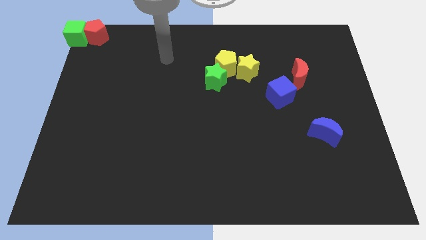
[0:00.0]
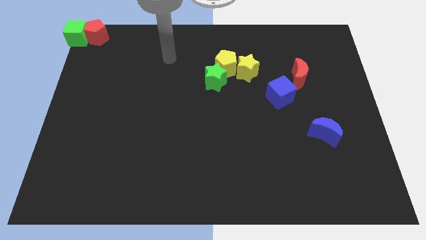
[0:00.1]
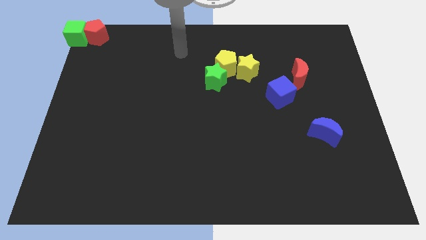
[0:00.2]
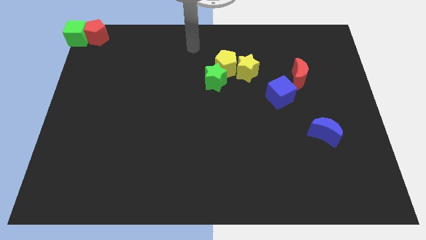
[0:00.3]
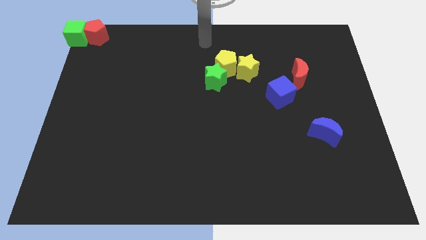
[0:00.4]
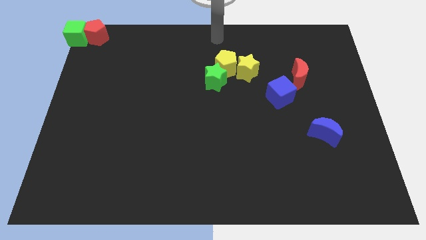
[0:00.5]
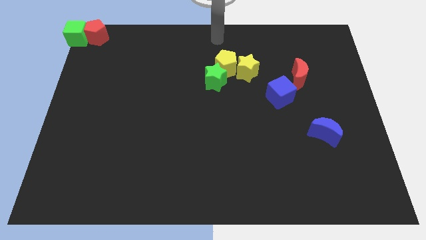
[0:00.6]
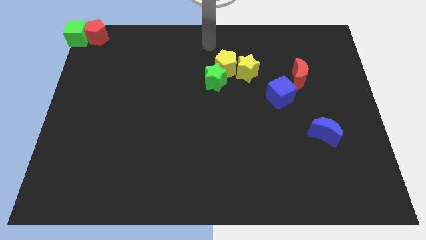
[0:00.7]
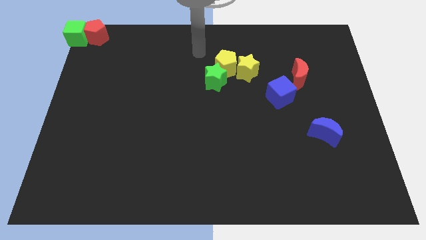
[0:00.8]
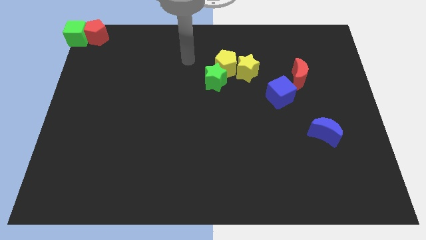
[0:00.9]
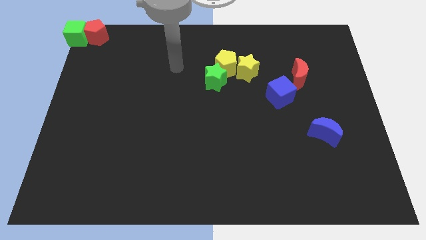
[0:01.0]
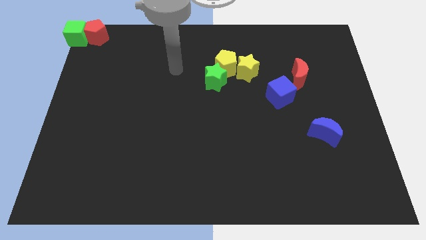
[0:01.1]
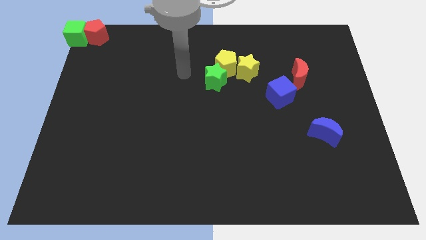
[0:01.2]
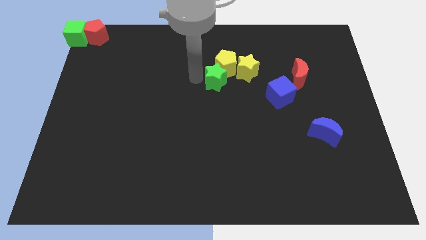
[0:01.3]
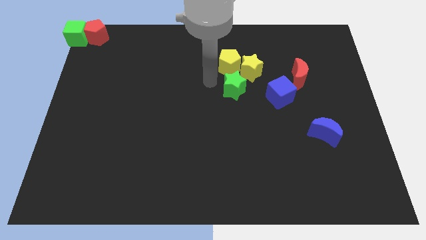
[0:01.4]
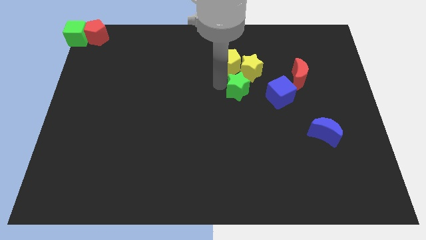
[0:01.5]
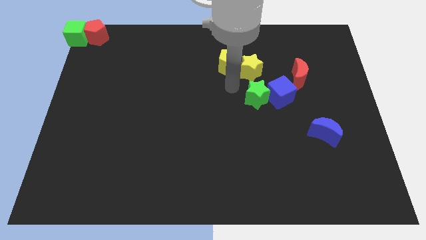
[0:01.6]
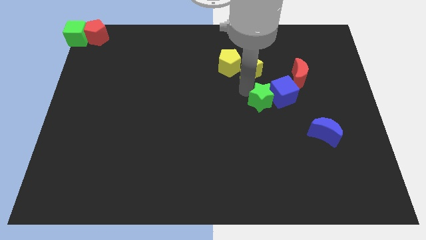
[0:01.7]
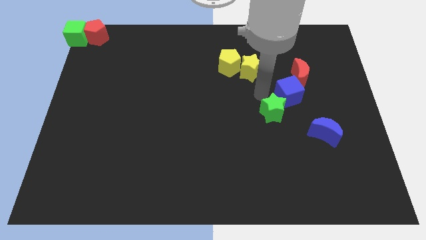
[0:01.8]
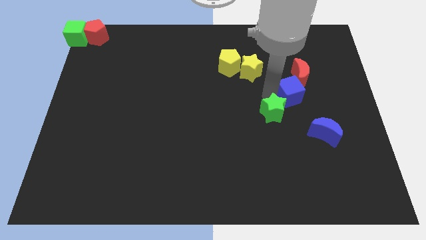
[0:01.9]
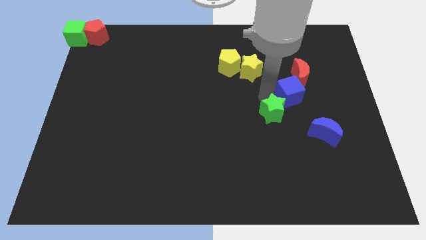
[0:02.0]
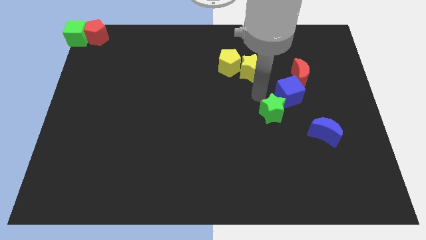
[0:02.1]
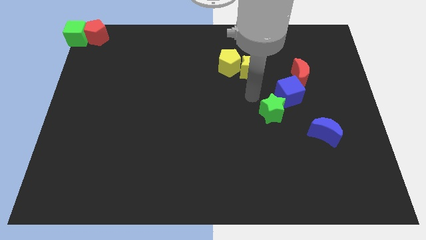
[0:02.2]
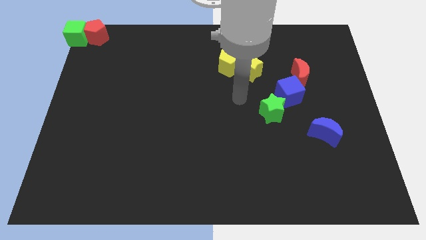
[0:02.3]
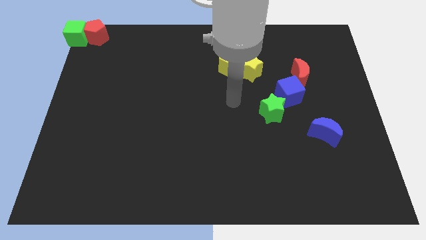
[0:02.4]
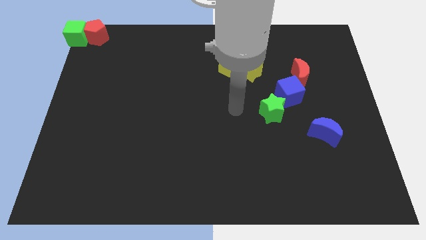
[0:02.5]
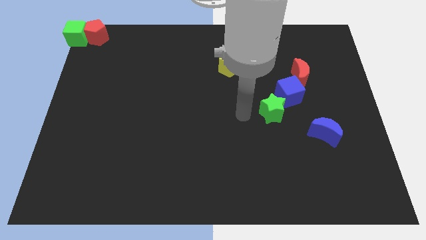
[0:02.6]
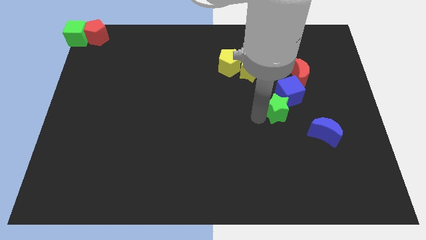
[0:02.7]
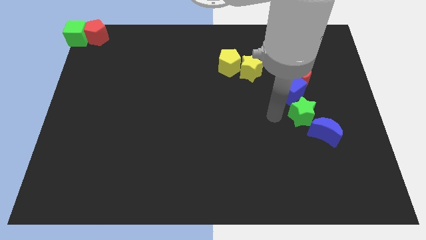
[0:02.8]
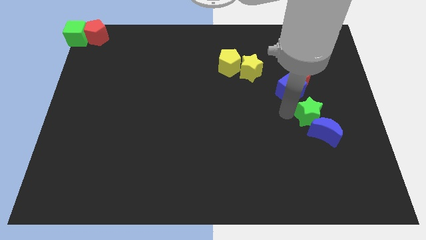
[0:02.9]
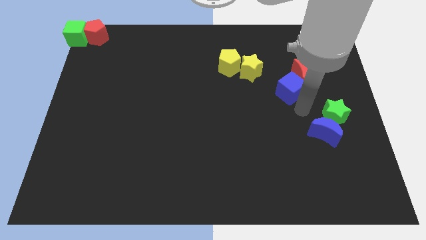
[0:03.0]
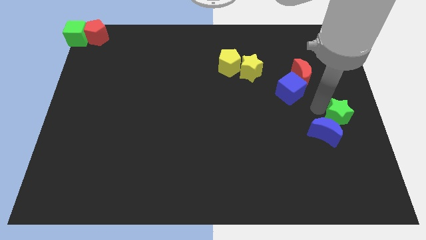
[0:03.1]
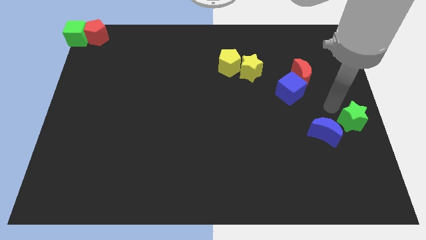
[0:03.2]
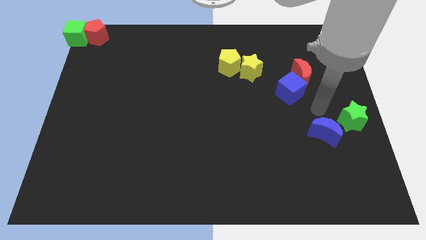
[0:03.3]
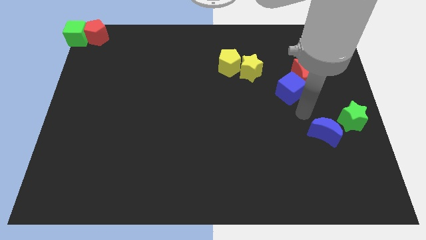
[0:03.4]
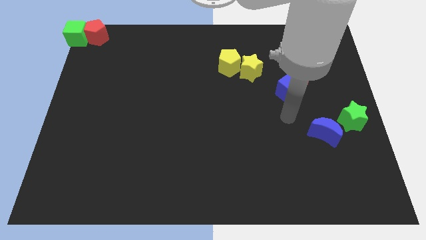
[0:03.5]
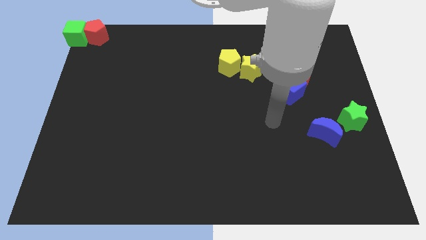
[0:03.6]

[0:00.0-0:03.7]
place green star to the top right of blue crescent

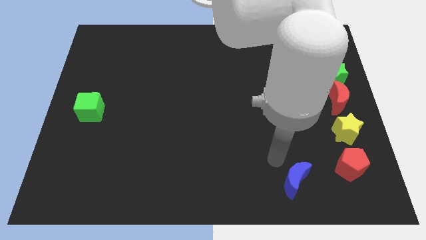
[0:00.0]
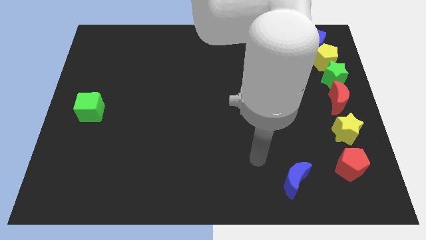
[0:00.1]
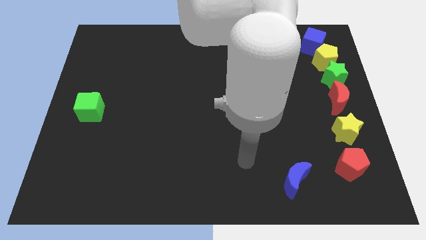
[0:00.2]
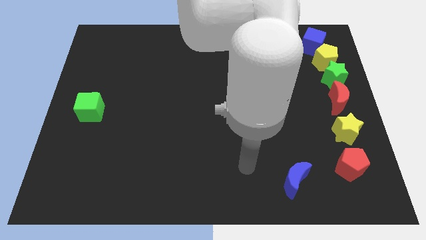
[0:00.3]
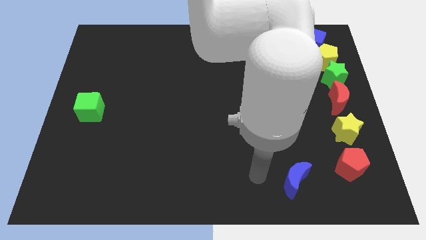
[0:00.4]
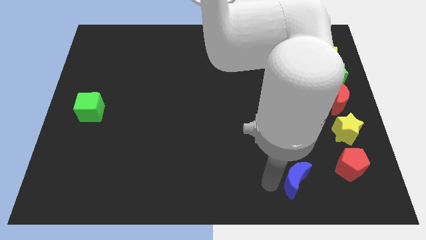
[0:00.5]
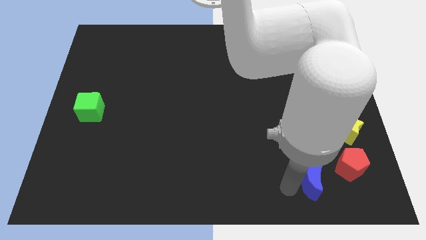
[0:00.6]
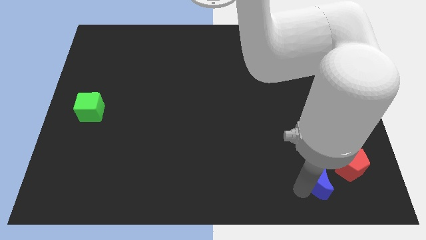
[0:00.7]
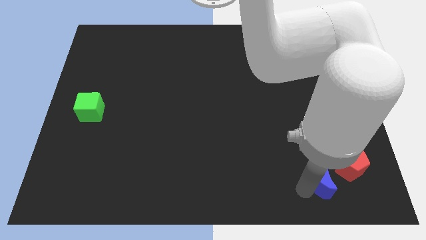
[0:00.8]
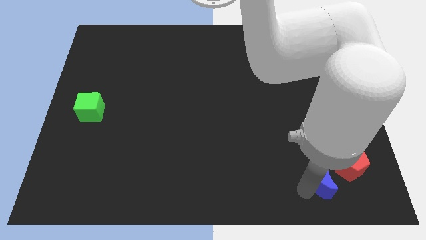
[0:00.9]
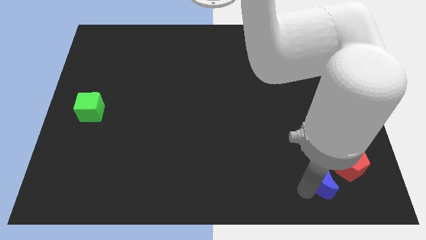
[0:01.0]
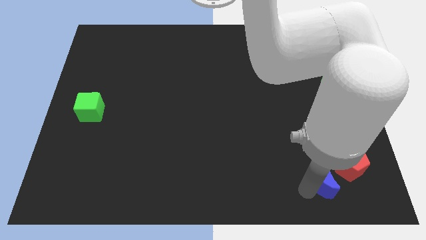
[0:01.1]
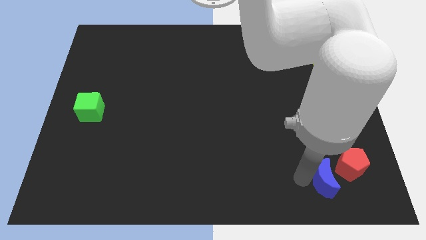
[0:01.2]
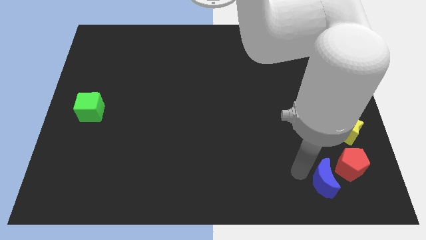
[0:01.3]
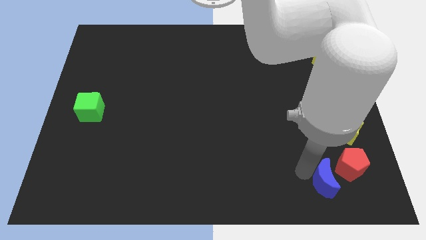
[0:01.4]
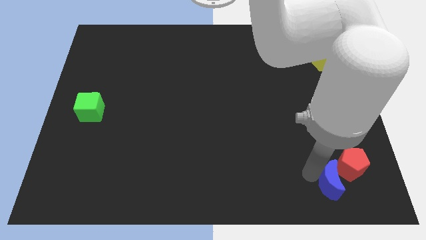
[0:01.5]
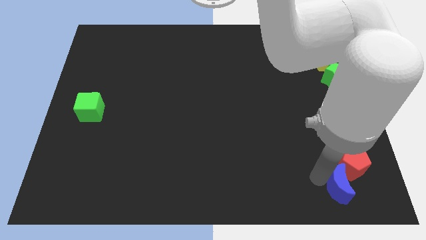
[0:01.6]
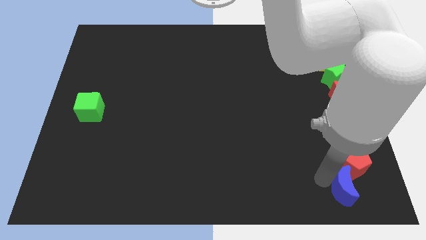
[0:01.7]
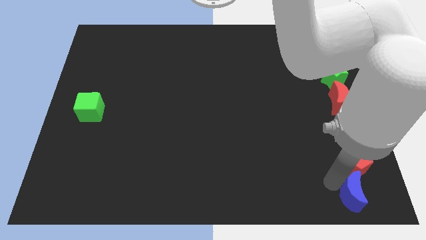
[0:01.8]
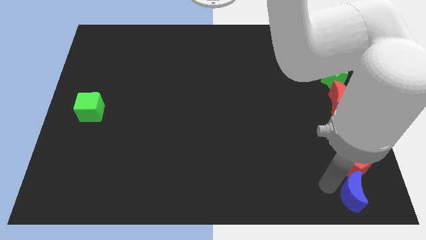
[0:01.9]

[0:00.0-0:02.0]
move the blue moon into the red pentagon

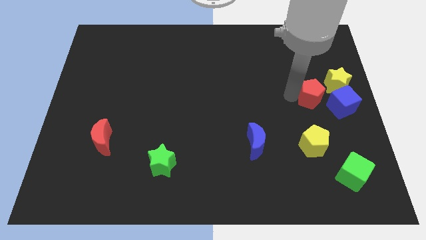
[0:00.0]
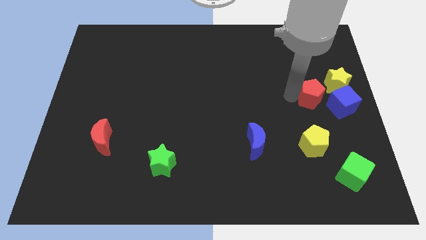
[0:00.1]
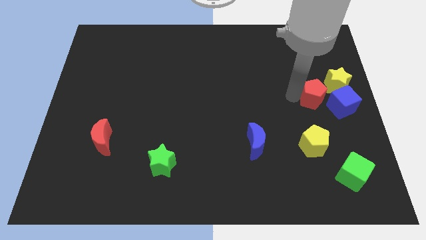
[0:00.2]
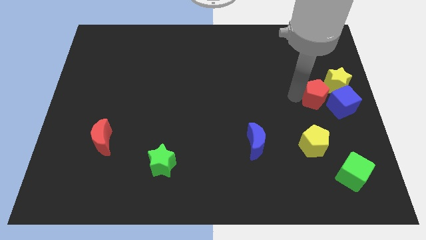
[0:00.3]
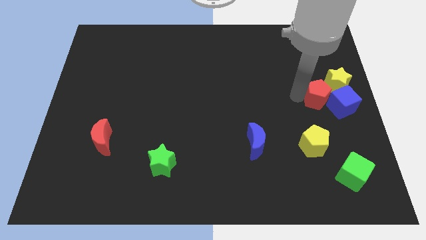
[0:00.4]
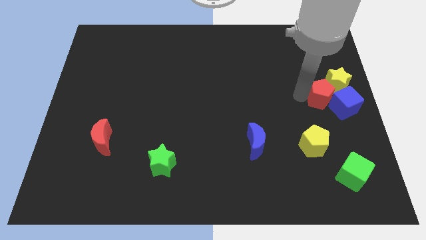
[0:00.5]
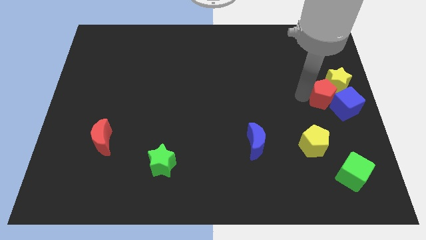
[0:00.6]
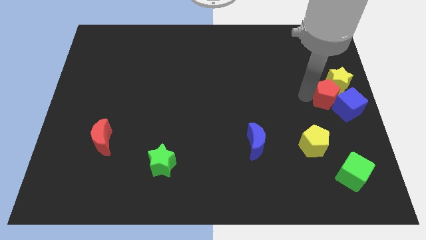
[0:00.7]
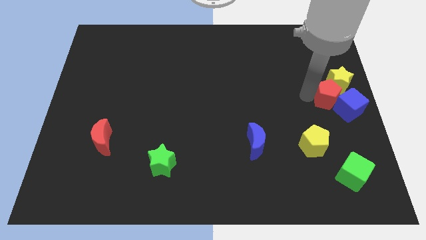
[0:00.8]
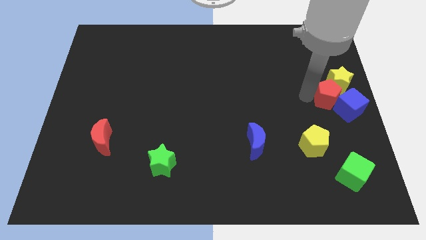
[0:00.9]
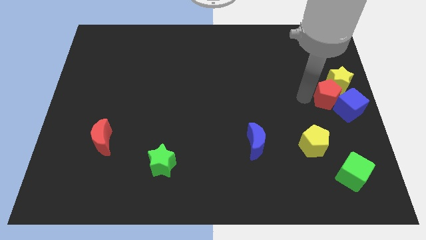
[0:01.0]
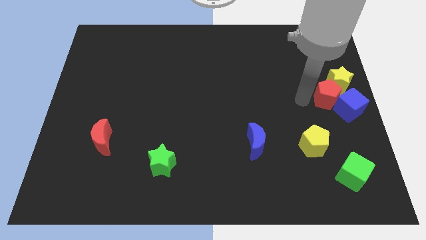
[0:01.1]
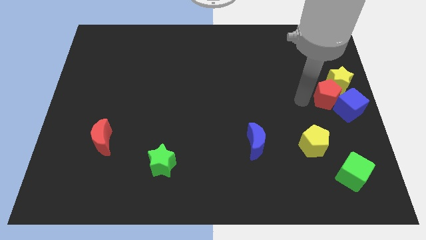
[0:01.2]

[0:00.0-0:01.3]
push the blue cube with the red pentagon slightly towards the right center of the board

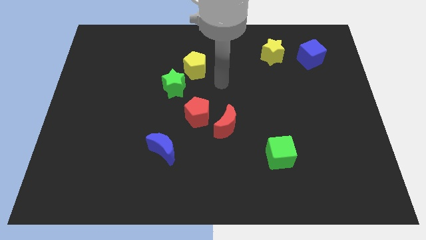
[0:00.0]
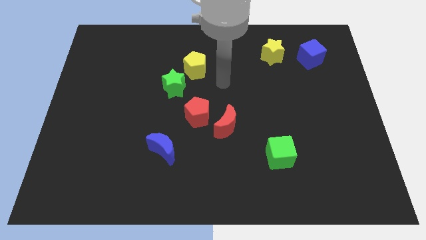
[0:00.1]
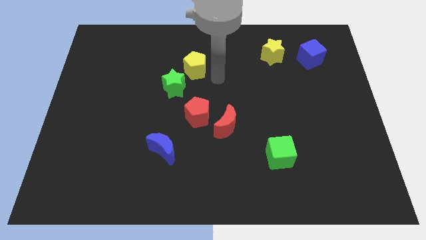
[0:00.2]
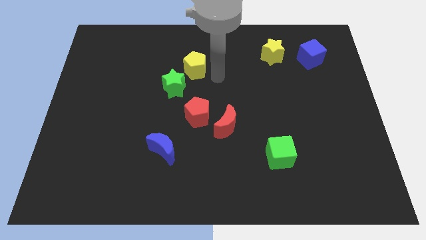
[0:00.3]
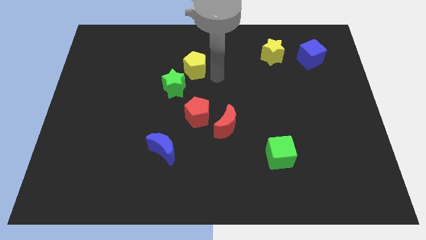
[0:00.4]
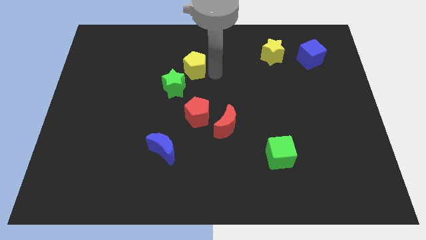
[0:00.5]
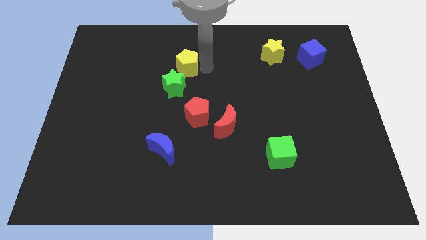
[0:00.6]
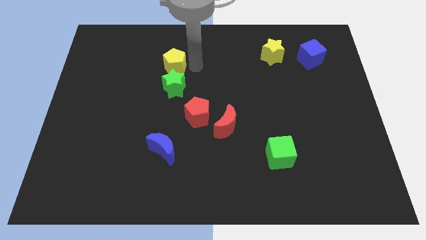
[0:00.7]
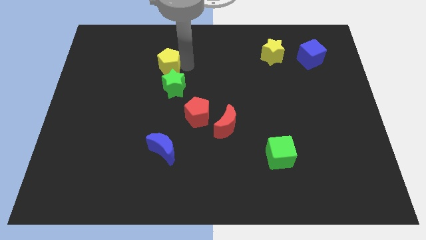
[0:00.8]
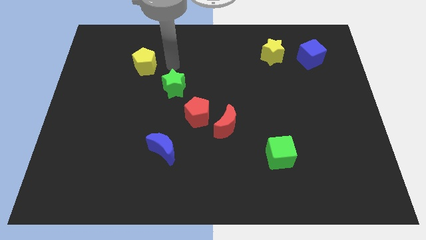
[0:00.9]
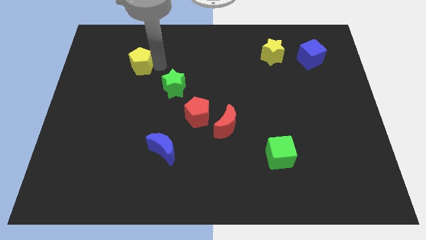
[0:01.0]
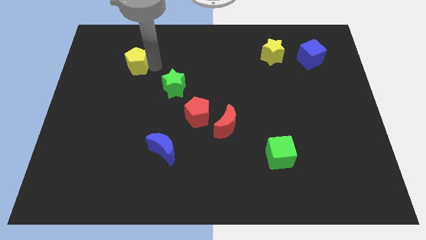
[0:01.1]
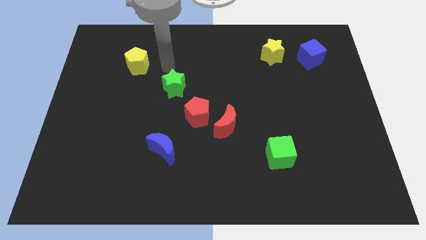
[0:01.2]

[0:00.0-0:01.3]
push the yellow pentagon slightly to the left side of the board

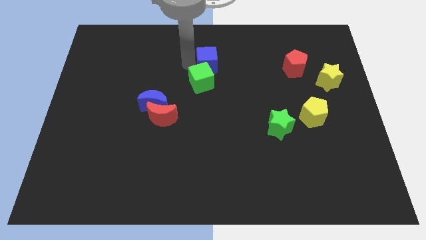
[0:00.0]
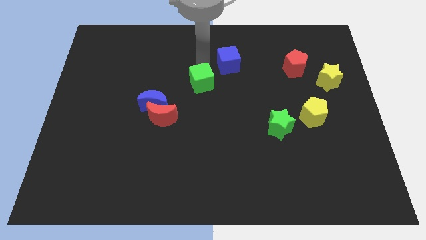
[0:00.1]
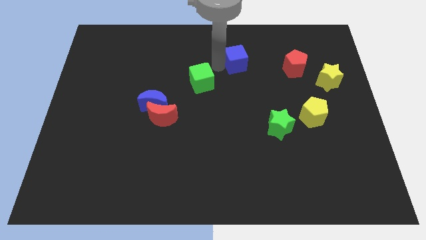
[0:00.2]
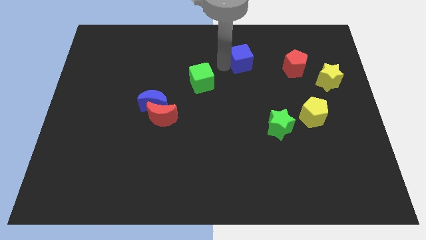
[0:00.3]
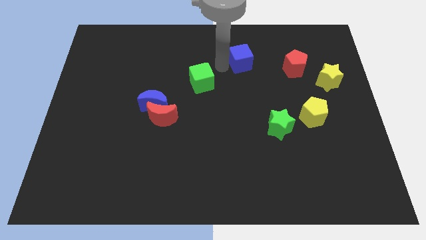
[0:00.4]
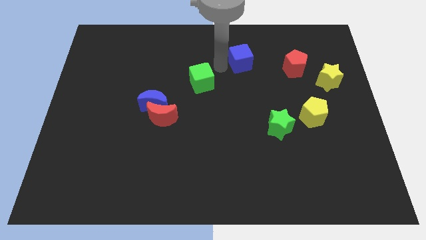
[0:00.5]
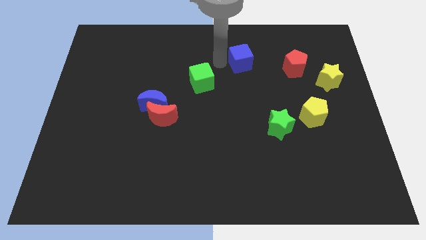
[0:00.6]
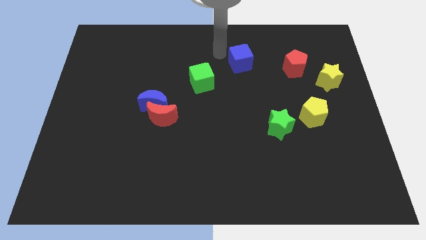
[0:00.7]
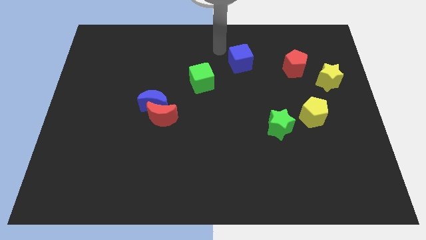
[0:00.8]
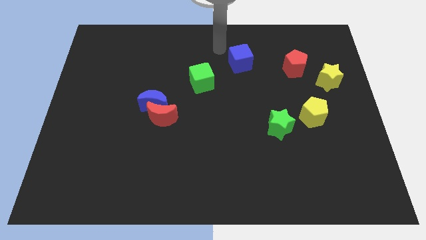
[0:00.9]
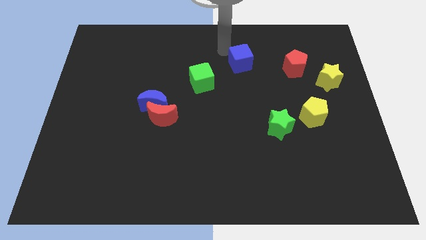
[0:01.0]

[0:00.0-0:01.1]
separate the blue cube from the green cube
